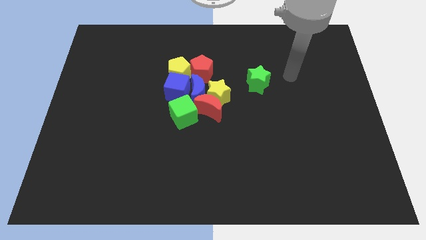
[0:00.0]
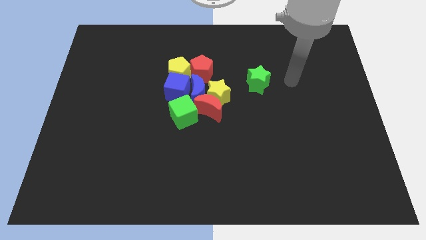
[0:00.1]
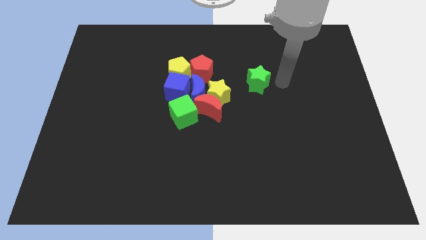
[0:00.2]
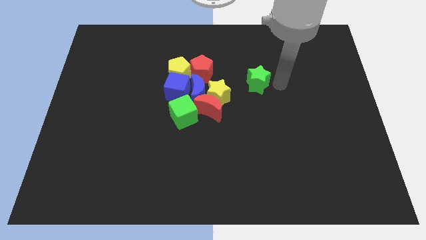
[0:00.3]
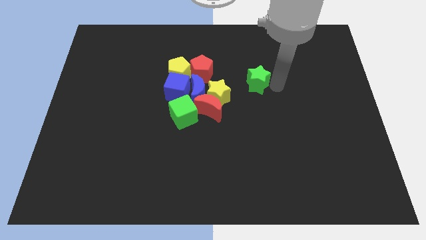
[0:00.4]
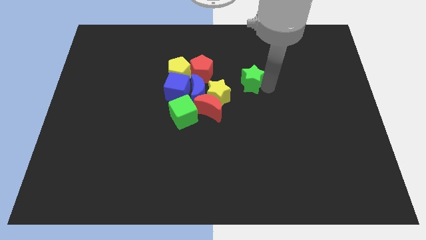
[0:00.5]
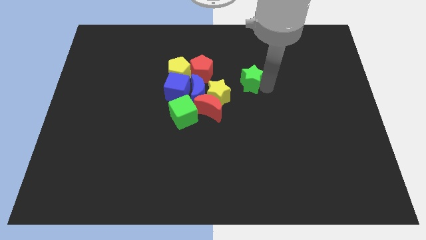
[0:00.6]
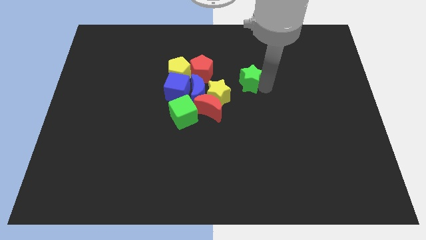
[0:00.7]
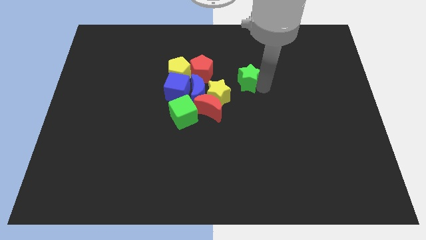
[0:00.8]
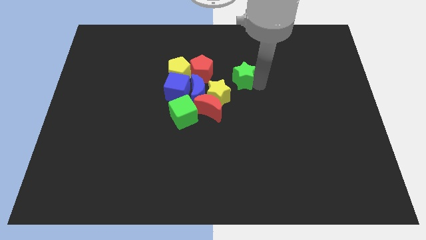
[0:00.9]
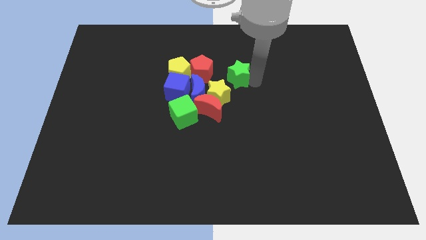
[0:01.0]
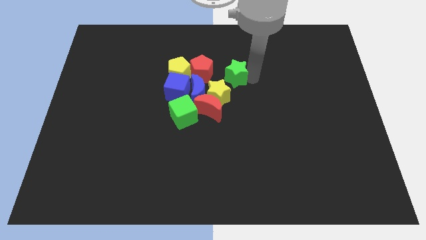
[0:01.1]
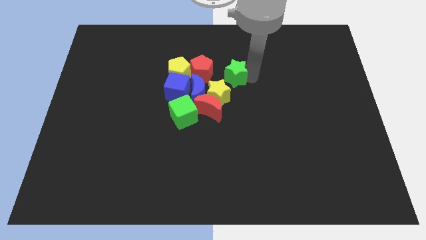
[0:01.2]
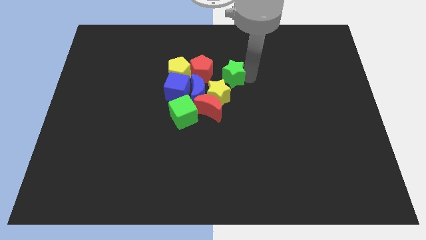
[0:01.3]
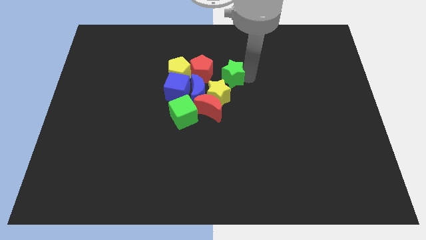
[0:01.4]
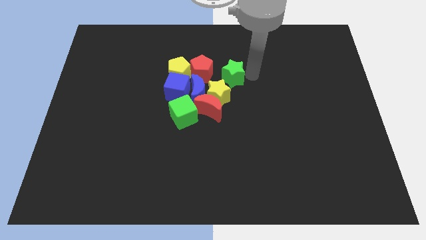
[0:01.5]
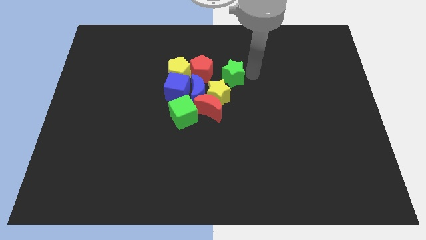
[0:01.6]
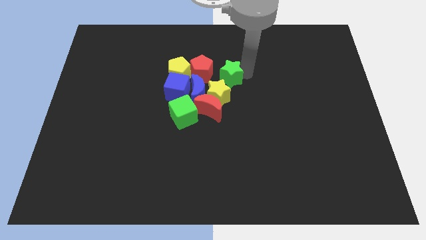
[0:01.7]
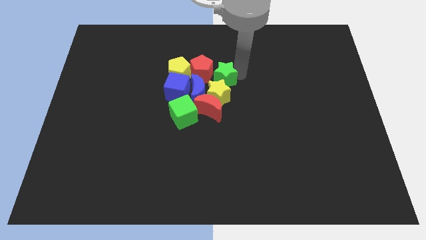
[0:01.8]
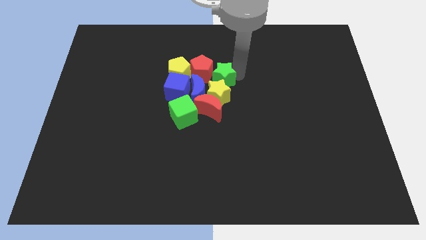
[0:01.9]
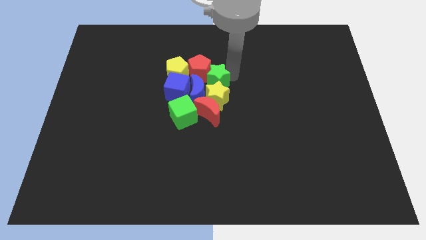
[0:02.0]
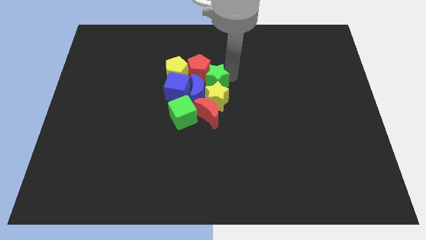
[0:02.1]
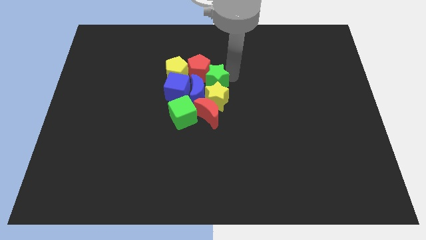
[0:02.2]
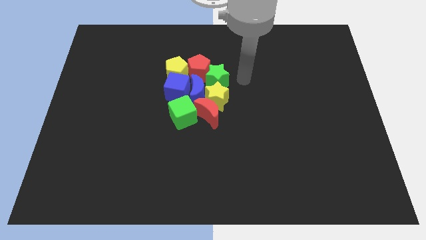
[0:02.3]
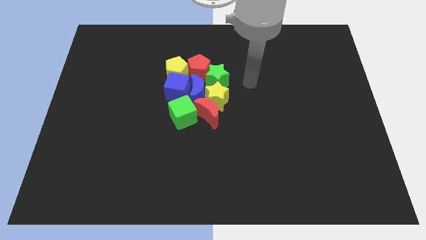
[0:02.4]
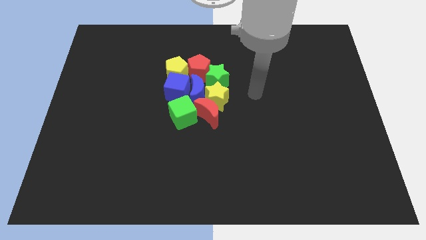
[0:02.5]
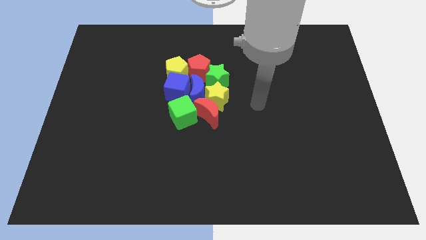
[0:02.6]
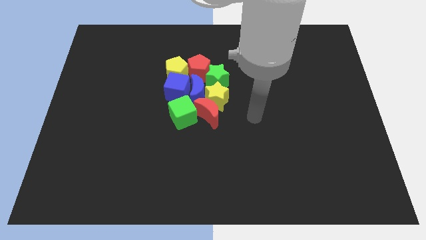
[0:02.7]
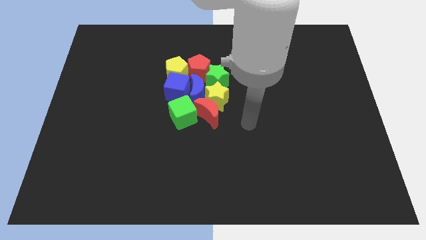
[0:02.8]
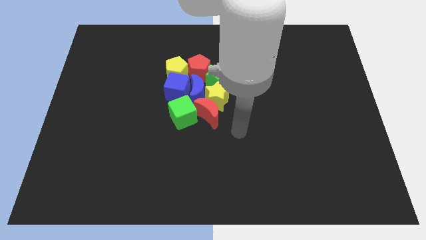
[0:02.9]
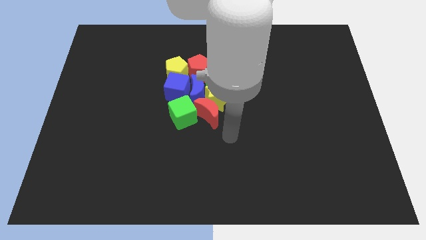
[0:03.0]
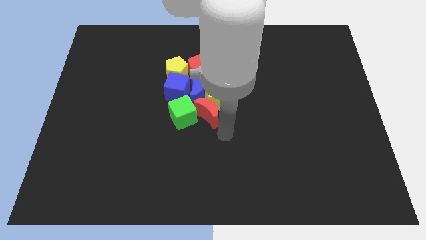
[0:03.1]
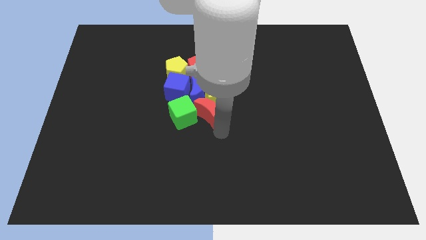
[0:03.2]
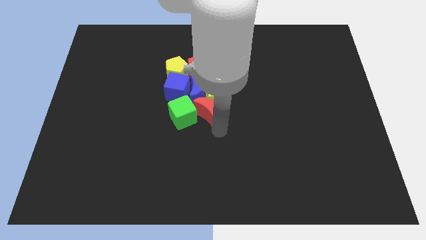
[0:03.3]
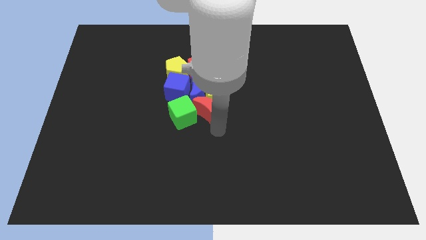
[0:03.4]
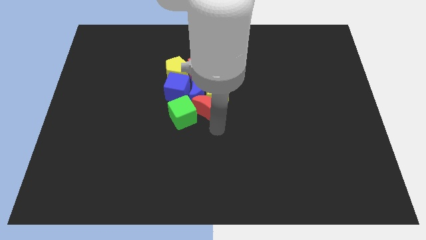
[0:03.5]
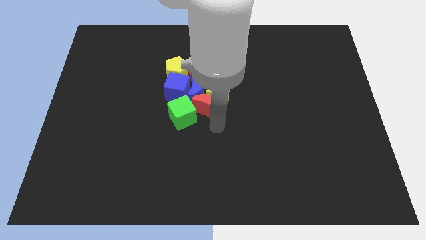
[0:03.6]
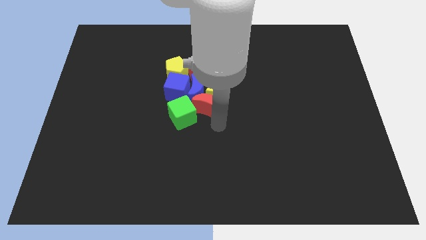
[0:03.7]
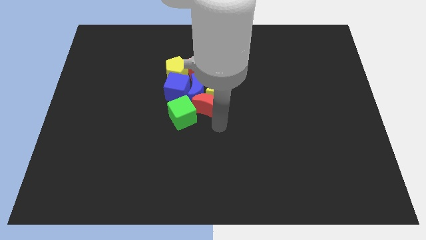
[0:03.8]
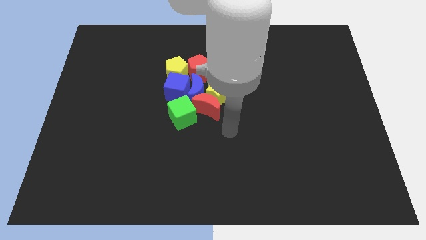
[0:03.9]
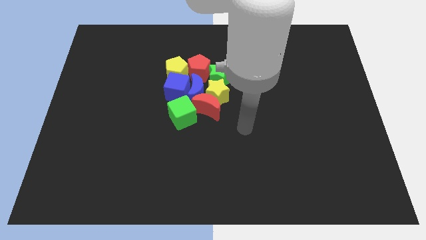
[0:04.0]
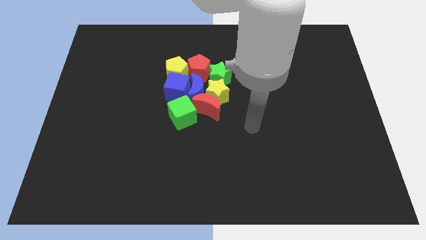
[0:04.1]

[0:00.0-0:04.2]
push green star into group of blocks

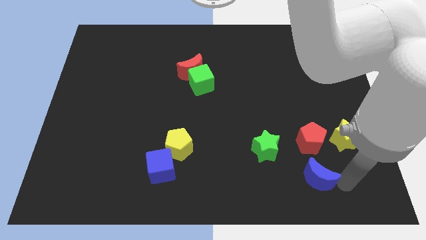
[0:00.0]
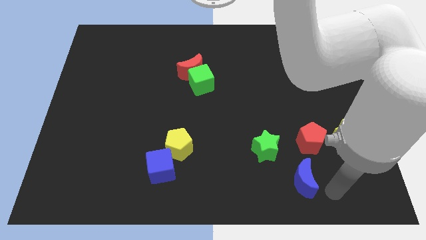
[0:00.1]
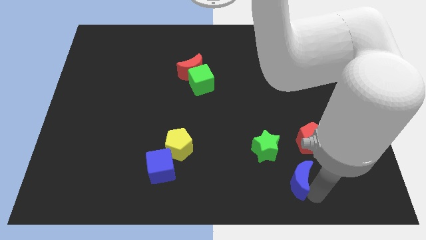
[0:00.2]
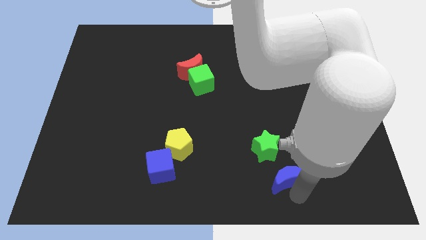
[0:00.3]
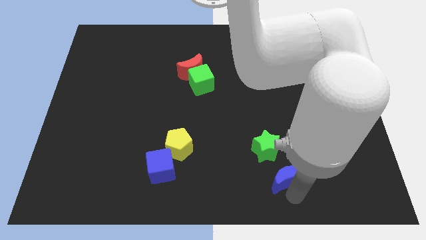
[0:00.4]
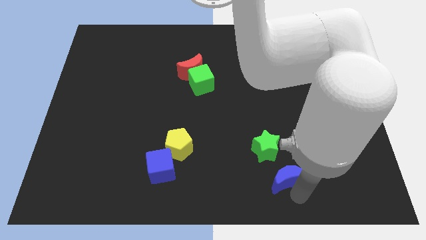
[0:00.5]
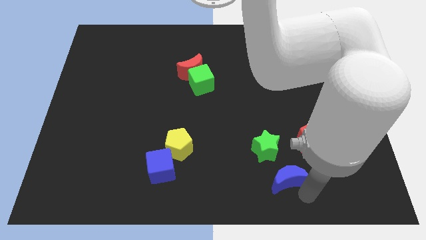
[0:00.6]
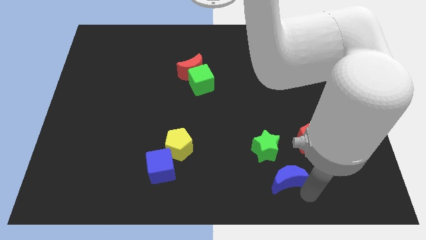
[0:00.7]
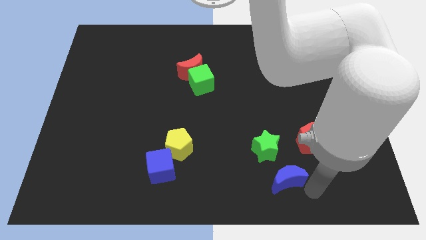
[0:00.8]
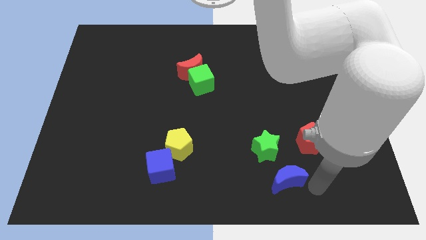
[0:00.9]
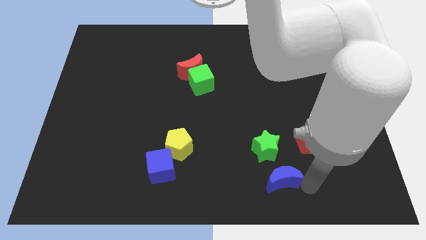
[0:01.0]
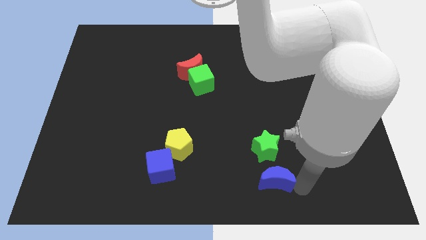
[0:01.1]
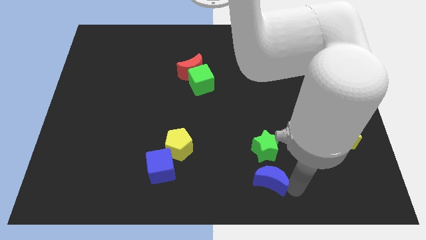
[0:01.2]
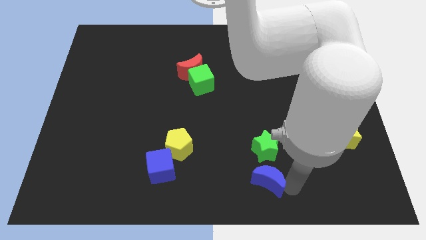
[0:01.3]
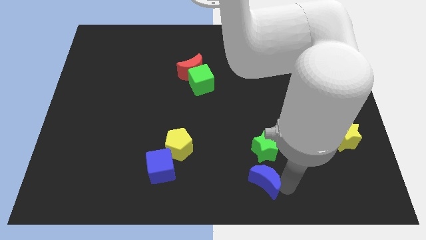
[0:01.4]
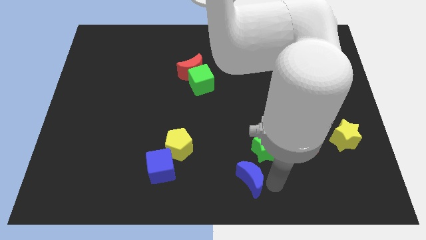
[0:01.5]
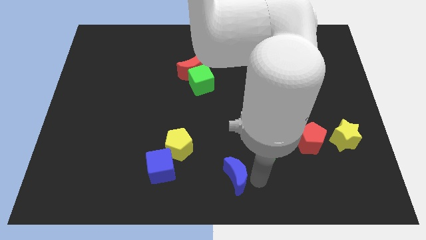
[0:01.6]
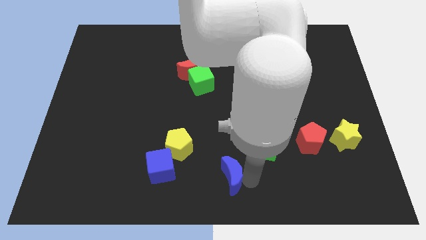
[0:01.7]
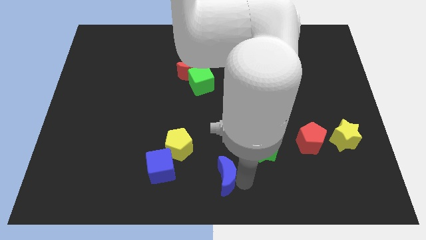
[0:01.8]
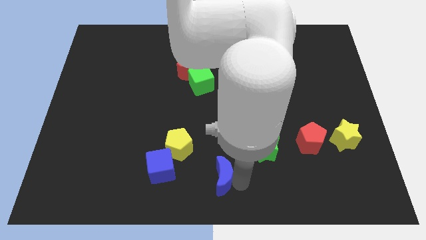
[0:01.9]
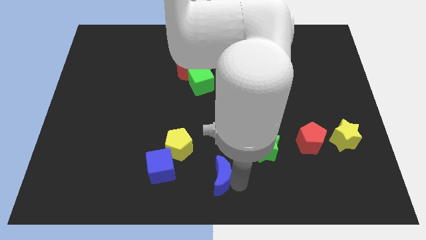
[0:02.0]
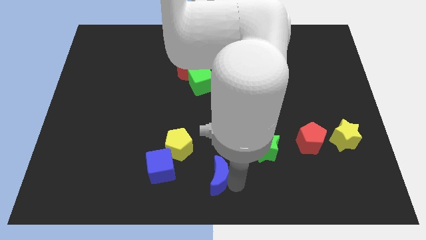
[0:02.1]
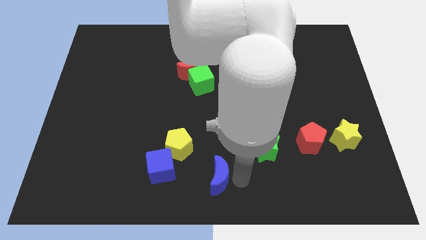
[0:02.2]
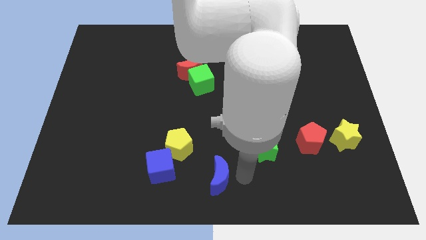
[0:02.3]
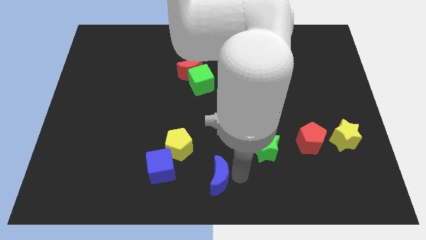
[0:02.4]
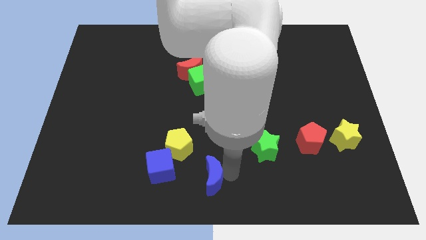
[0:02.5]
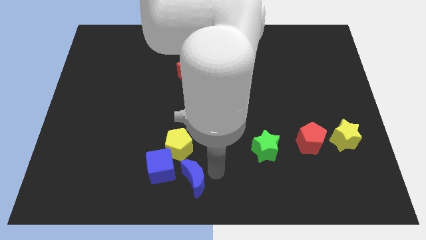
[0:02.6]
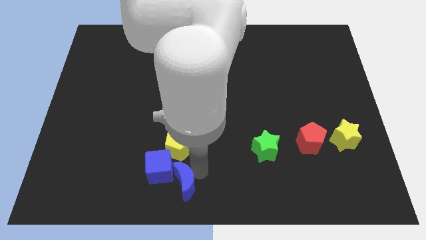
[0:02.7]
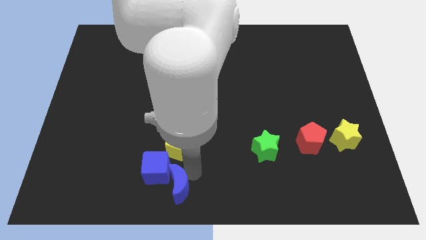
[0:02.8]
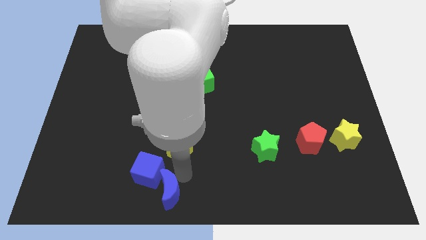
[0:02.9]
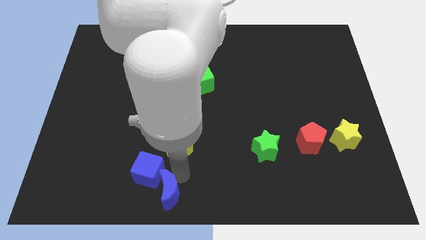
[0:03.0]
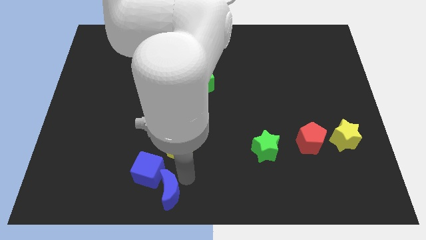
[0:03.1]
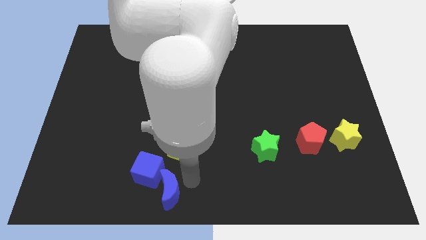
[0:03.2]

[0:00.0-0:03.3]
push the blue moon into the blue cube

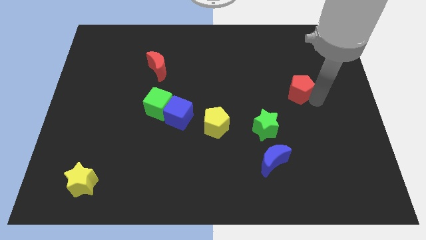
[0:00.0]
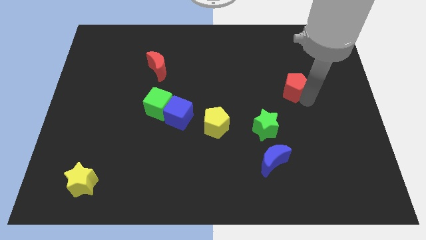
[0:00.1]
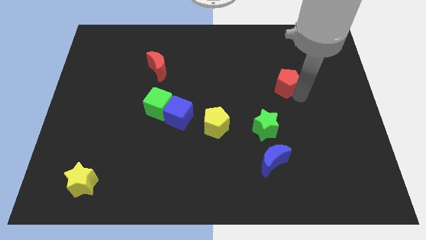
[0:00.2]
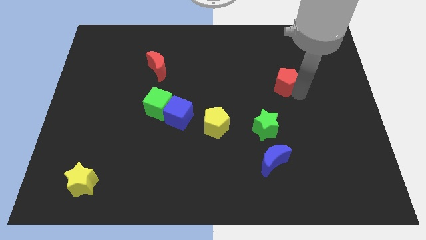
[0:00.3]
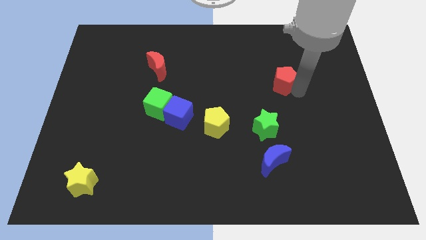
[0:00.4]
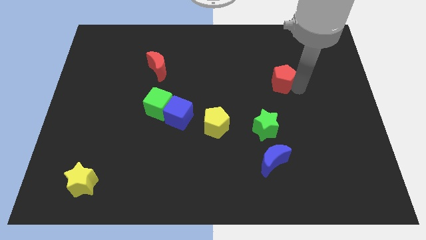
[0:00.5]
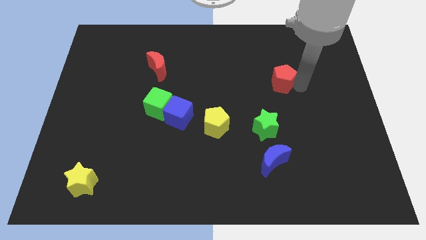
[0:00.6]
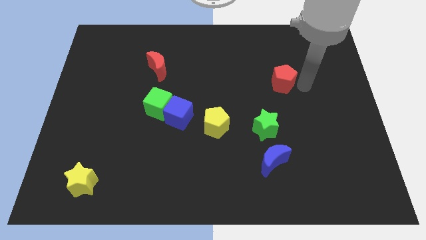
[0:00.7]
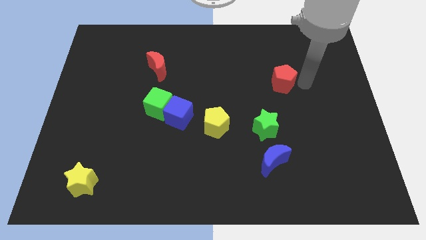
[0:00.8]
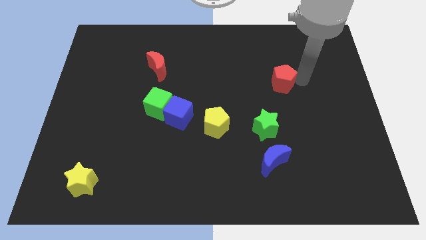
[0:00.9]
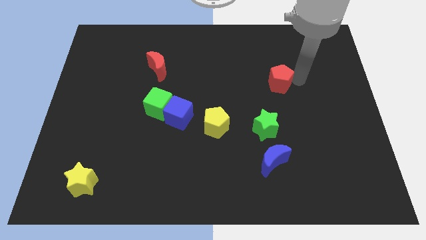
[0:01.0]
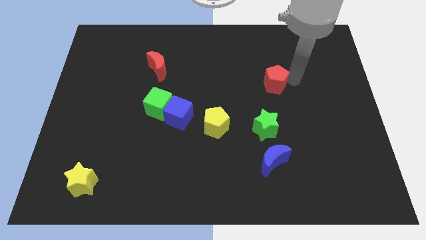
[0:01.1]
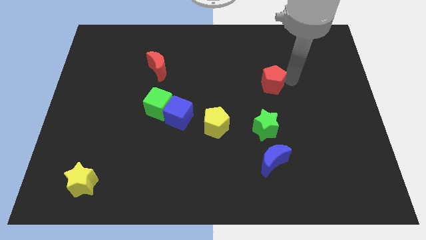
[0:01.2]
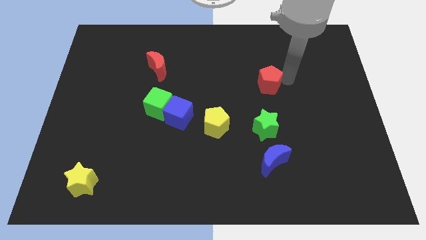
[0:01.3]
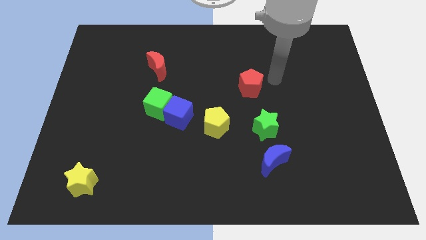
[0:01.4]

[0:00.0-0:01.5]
move the red pentagon parallel to the top of the green star

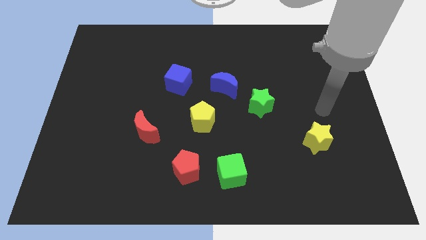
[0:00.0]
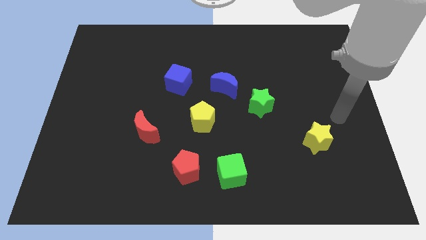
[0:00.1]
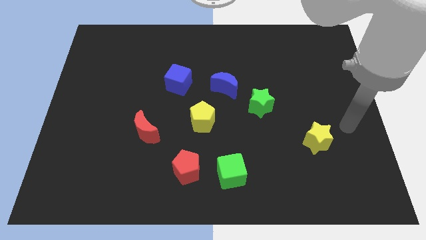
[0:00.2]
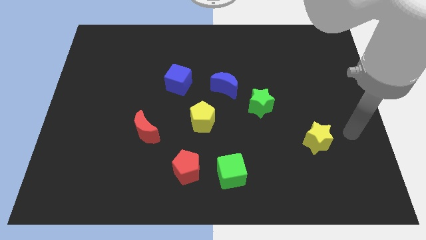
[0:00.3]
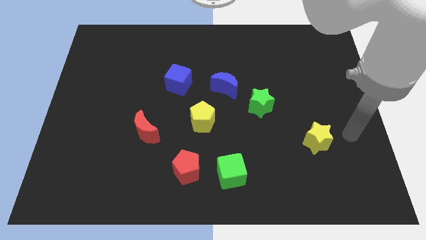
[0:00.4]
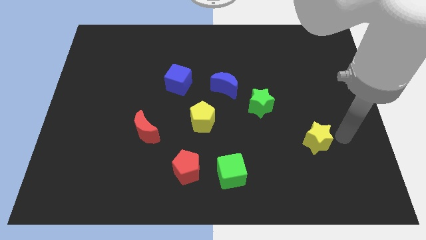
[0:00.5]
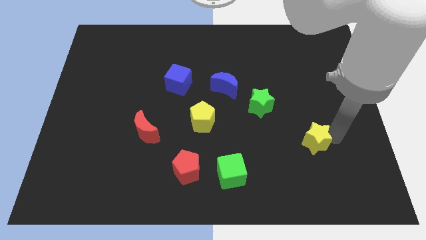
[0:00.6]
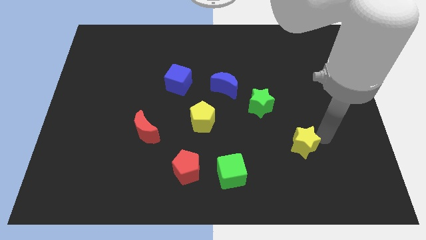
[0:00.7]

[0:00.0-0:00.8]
point your arm right to the yellow star
